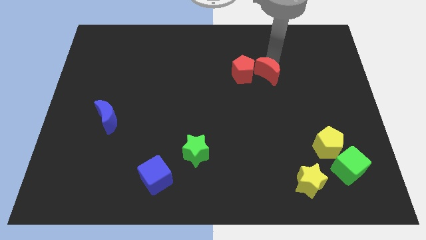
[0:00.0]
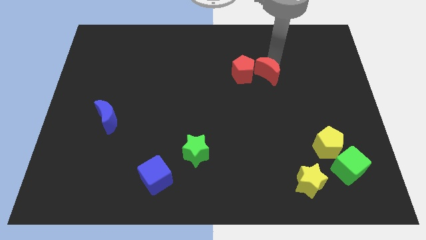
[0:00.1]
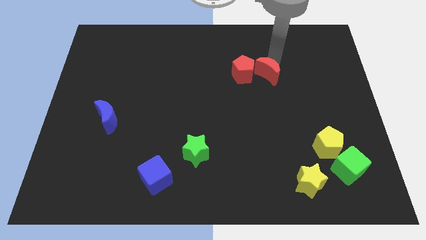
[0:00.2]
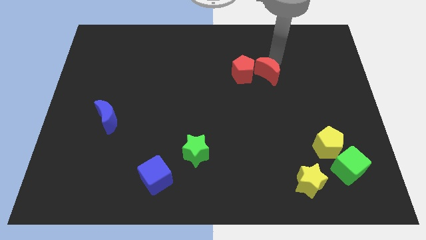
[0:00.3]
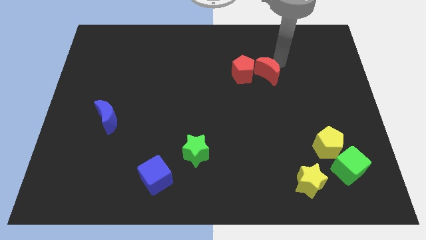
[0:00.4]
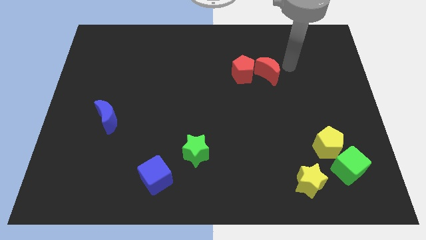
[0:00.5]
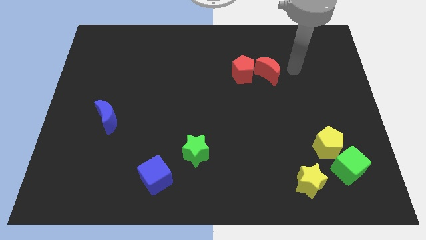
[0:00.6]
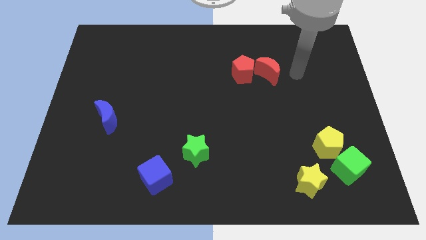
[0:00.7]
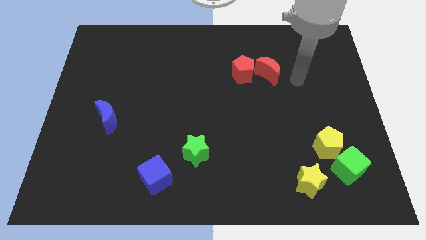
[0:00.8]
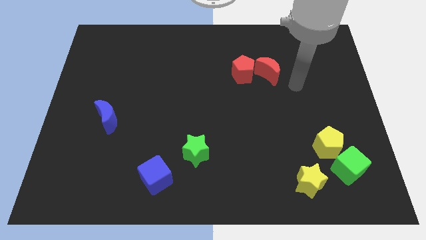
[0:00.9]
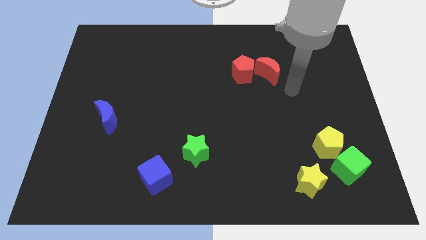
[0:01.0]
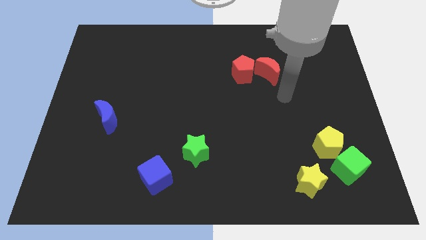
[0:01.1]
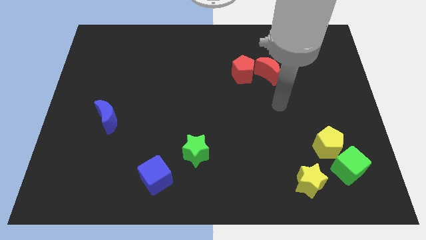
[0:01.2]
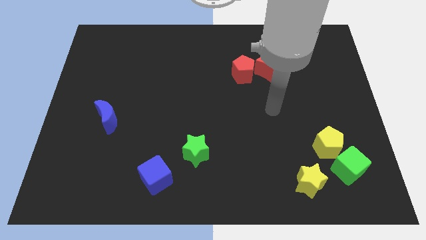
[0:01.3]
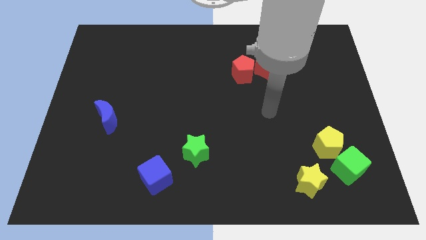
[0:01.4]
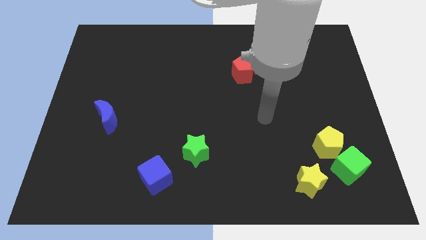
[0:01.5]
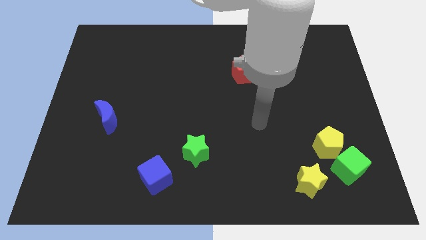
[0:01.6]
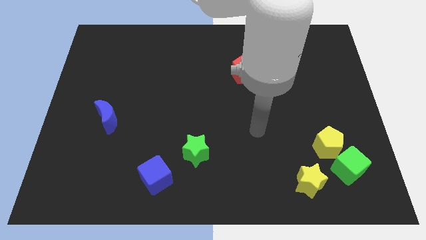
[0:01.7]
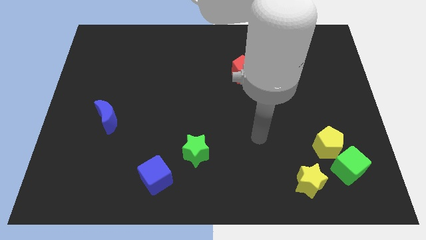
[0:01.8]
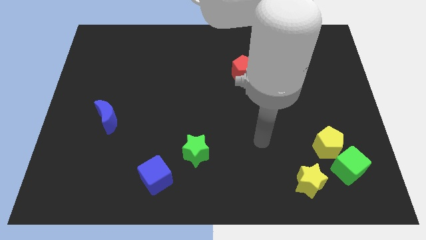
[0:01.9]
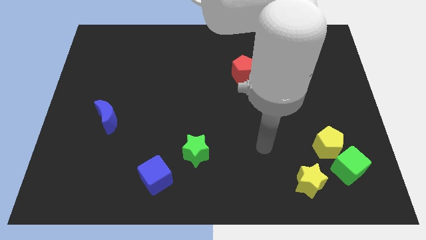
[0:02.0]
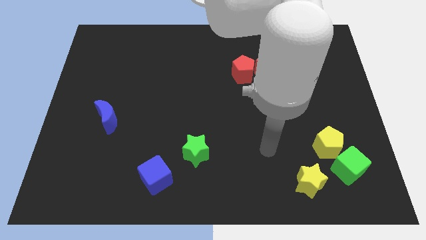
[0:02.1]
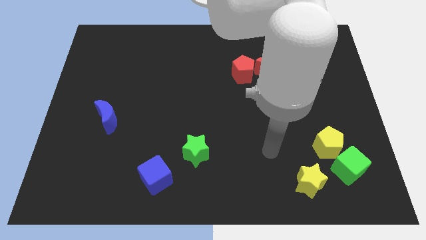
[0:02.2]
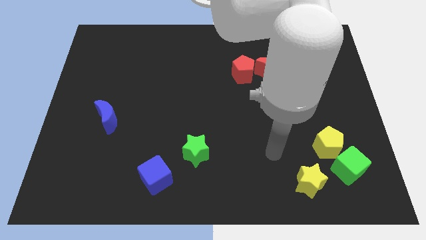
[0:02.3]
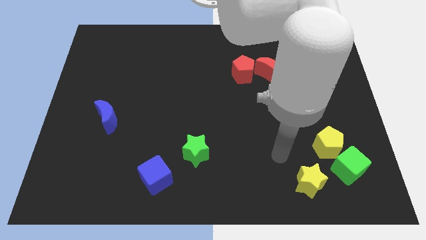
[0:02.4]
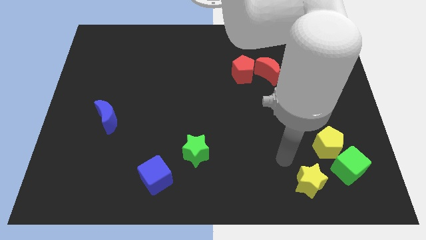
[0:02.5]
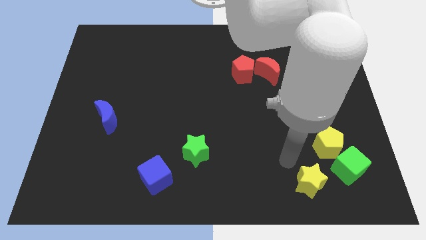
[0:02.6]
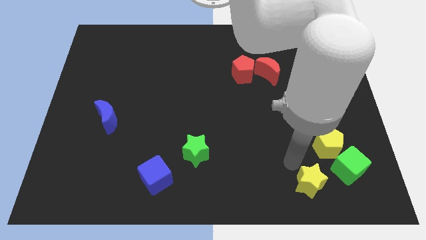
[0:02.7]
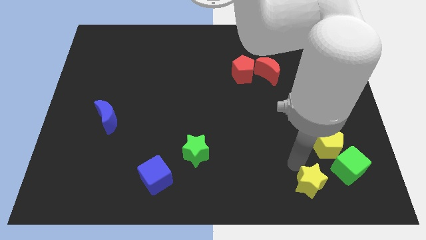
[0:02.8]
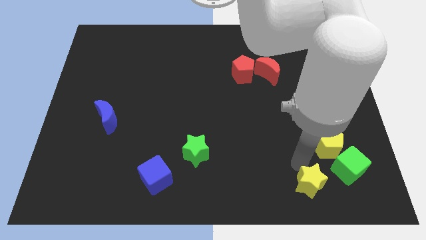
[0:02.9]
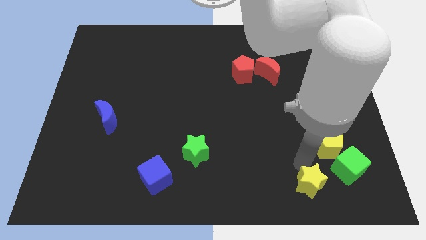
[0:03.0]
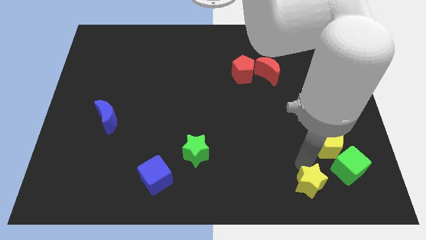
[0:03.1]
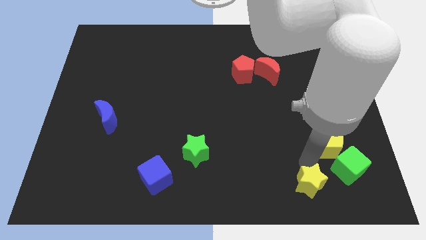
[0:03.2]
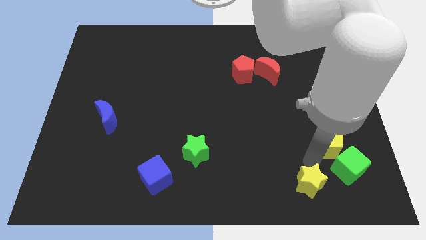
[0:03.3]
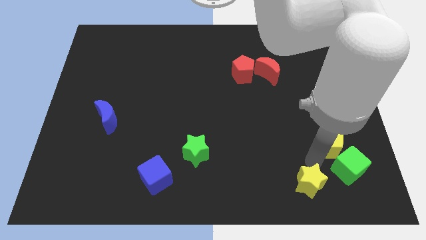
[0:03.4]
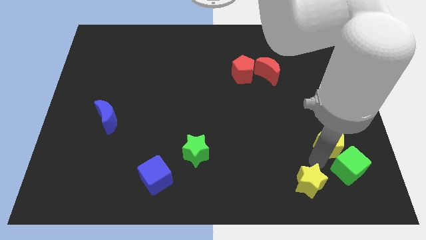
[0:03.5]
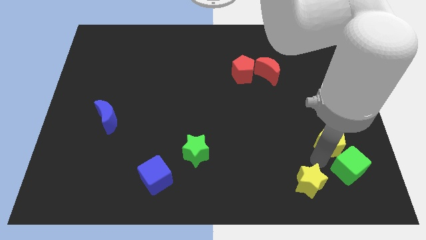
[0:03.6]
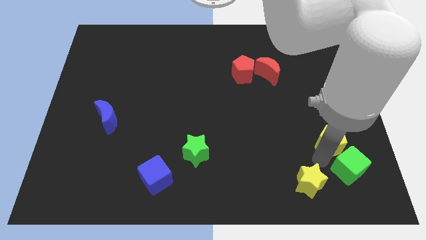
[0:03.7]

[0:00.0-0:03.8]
move your arm at the top left side of the yellow star

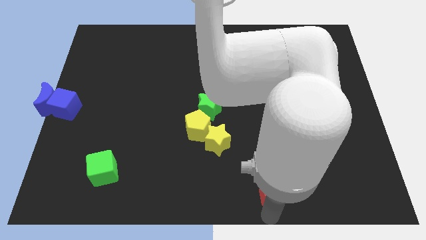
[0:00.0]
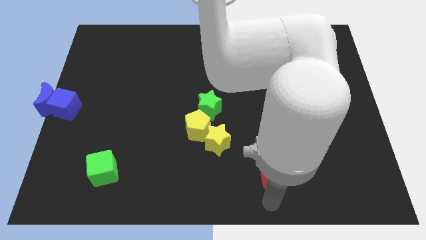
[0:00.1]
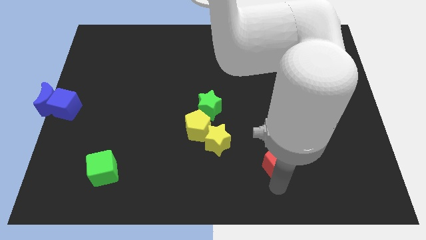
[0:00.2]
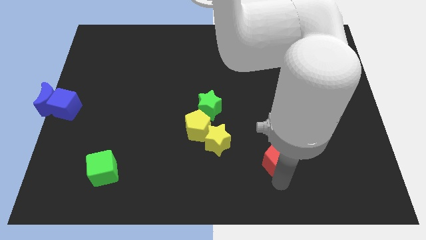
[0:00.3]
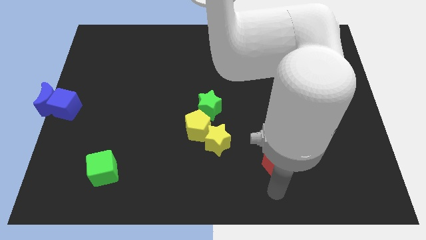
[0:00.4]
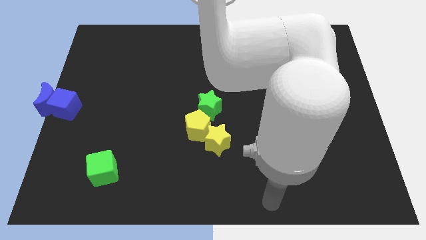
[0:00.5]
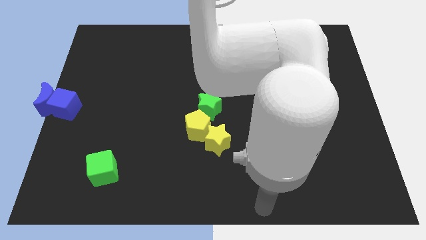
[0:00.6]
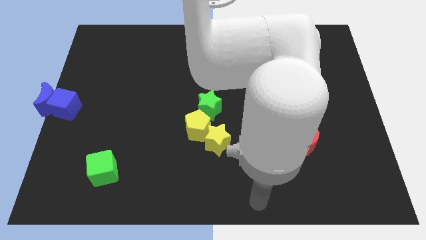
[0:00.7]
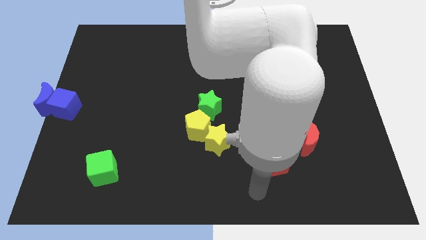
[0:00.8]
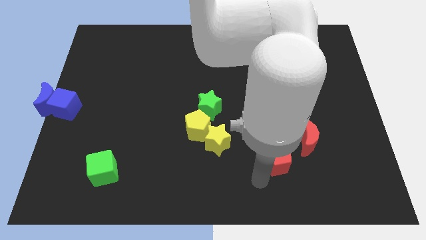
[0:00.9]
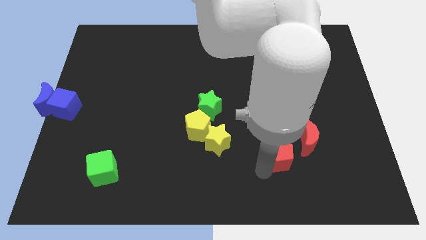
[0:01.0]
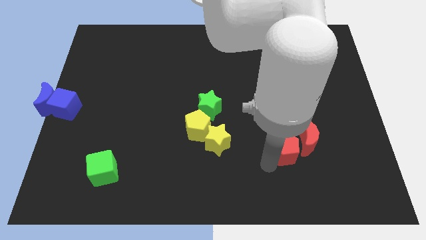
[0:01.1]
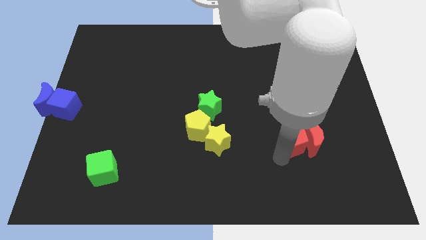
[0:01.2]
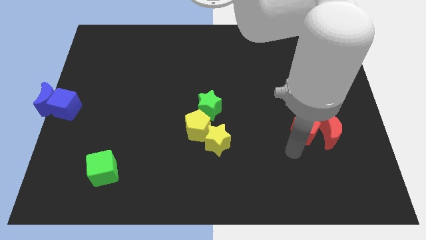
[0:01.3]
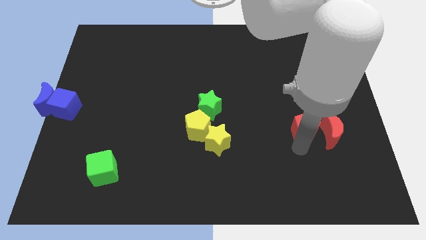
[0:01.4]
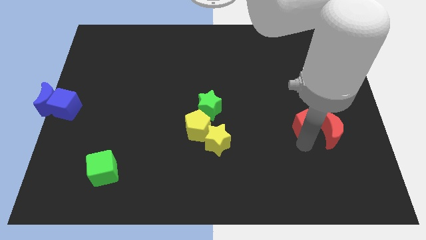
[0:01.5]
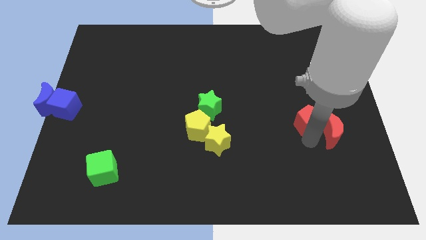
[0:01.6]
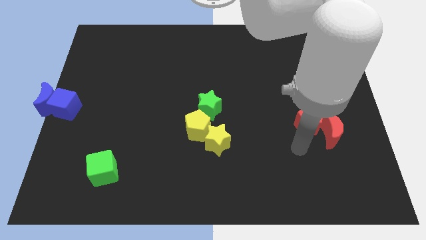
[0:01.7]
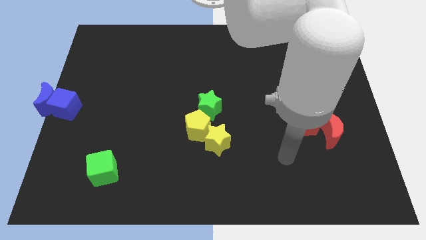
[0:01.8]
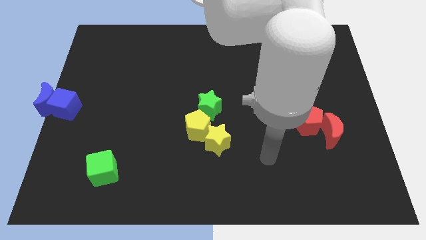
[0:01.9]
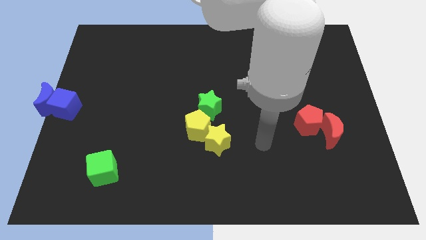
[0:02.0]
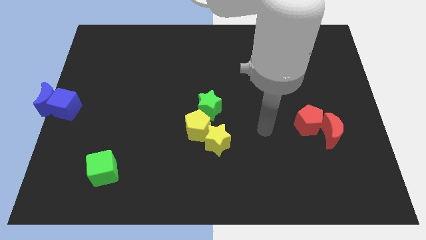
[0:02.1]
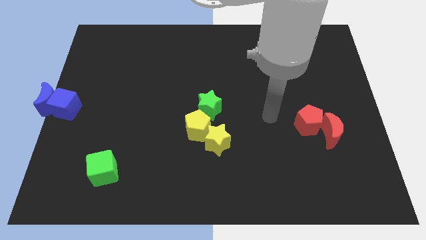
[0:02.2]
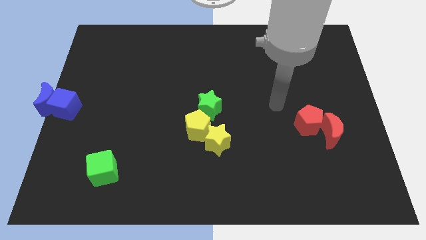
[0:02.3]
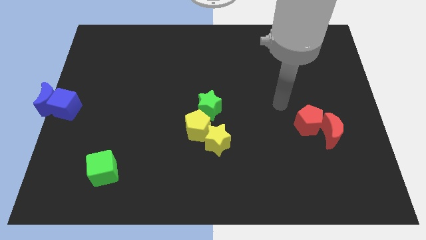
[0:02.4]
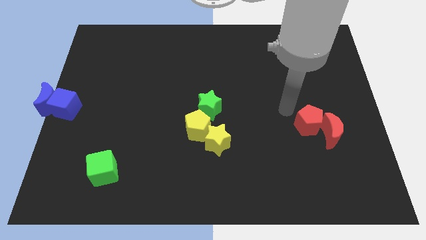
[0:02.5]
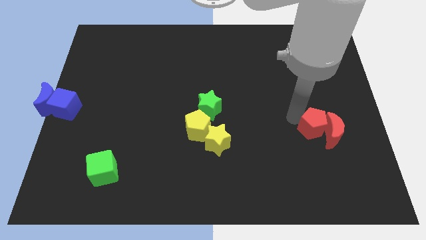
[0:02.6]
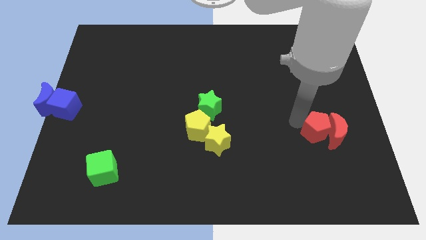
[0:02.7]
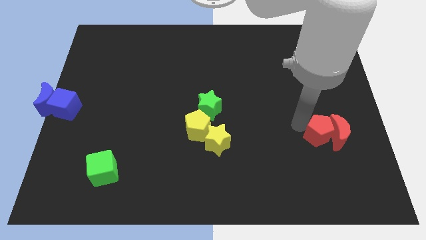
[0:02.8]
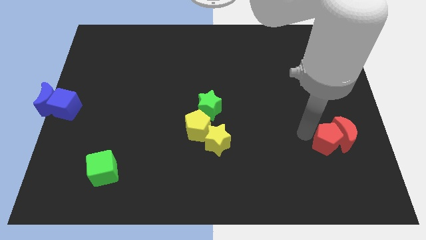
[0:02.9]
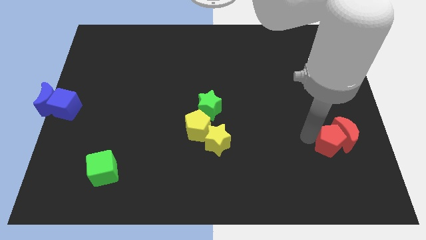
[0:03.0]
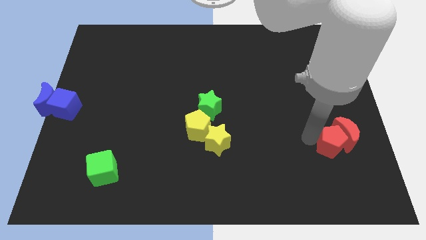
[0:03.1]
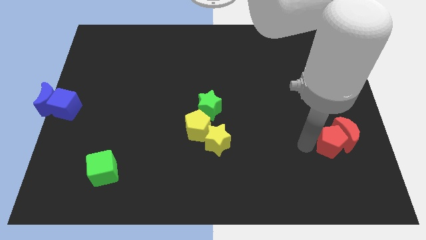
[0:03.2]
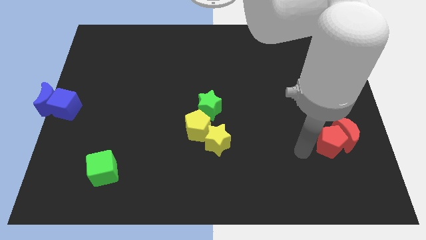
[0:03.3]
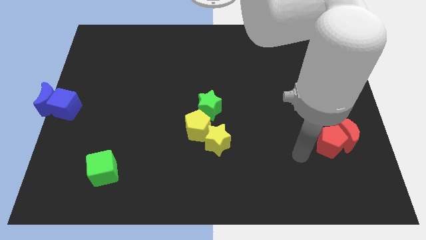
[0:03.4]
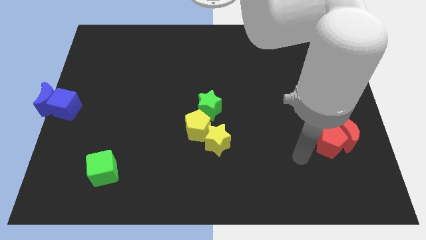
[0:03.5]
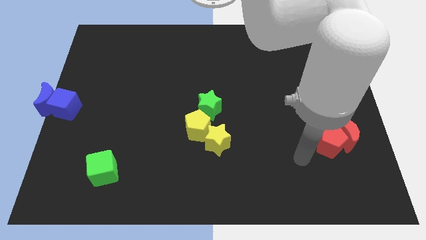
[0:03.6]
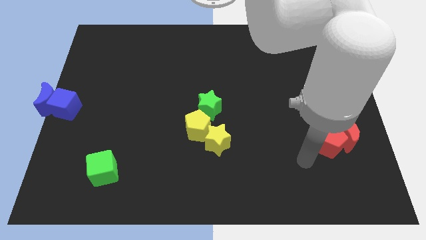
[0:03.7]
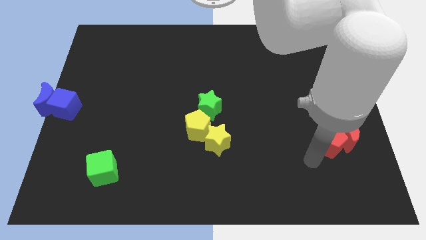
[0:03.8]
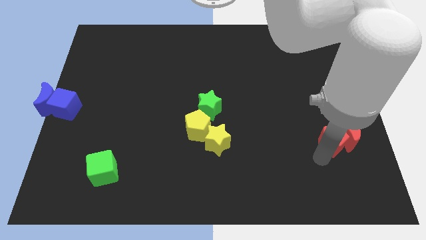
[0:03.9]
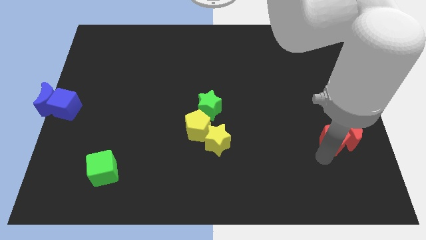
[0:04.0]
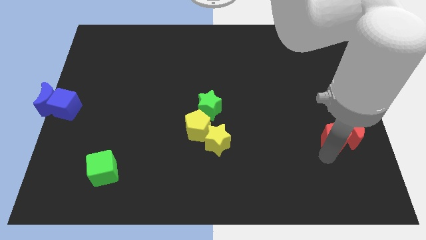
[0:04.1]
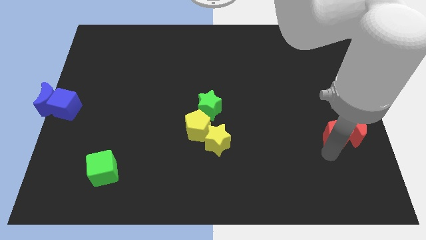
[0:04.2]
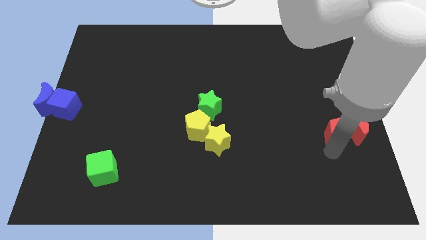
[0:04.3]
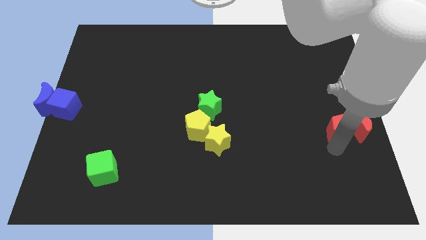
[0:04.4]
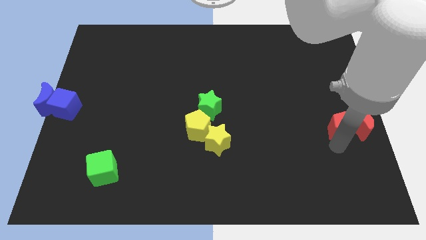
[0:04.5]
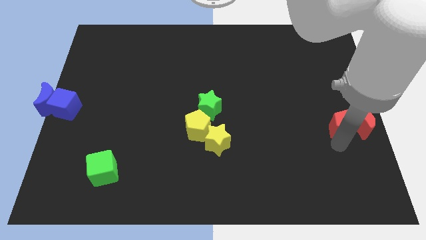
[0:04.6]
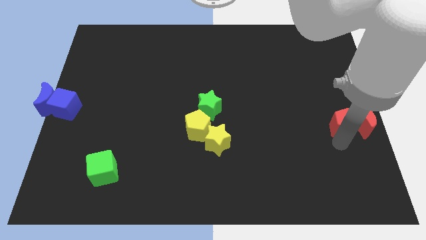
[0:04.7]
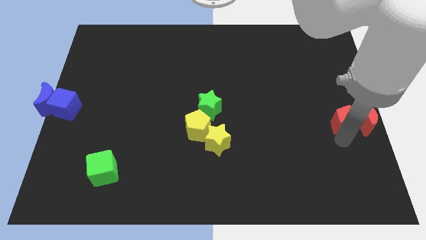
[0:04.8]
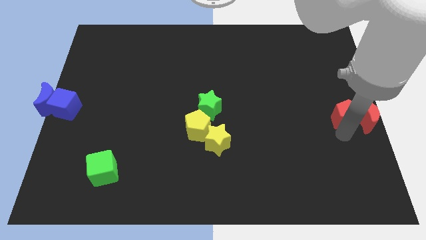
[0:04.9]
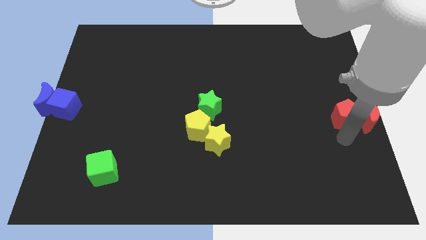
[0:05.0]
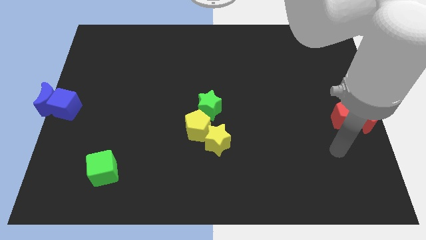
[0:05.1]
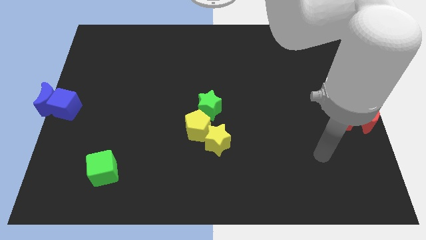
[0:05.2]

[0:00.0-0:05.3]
push the red blocks to the center right

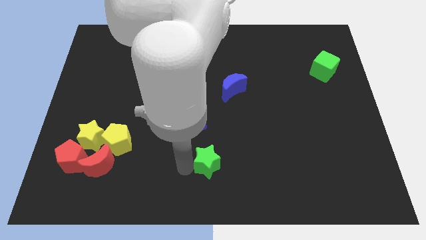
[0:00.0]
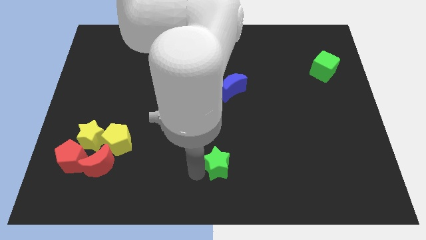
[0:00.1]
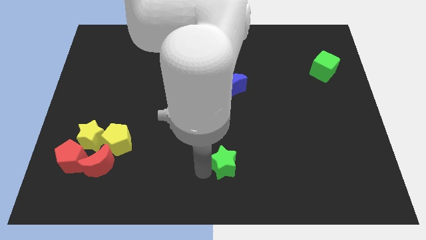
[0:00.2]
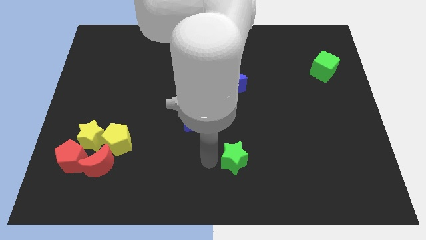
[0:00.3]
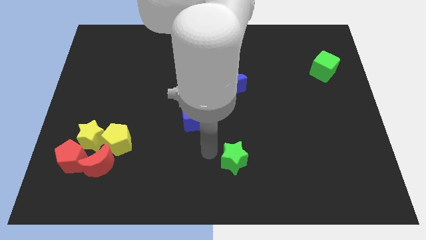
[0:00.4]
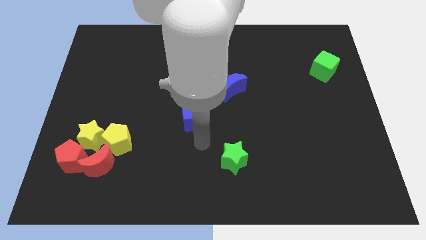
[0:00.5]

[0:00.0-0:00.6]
push the green star to the right of the board
